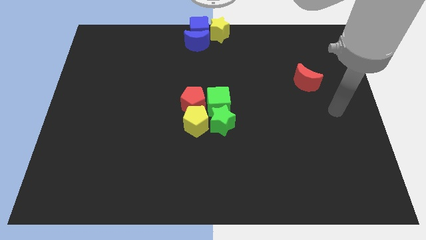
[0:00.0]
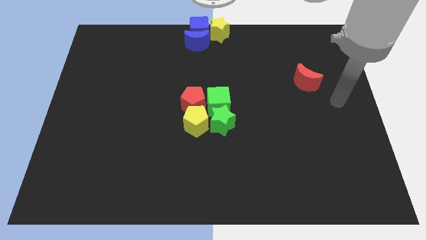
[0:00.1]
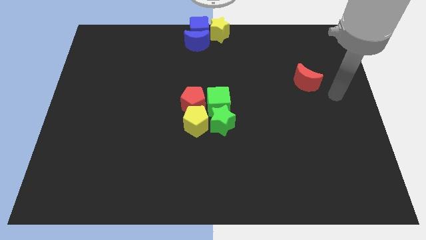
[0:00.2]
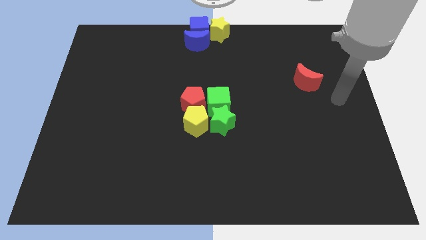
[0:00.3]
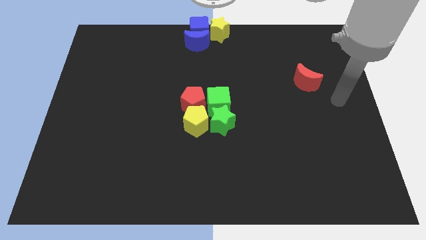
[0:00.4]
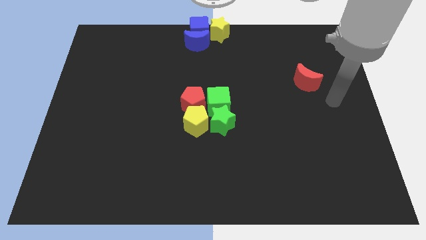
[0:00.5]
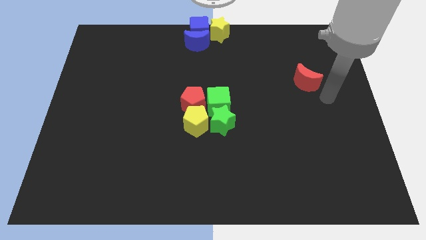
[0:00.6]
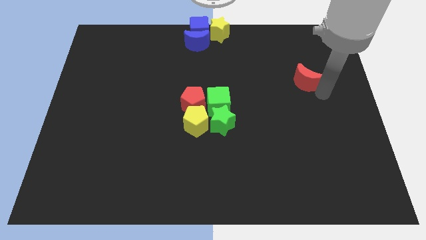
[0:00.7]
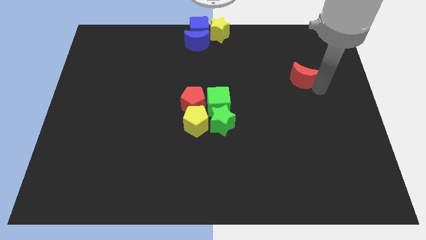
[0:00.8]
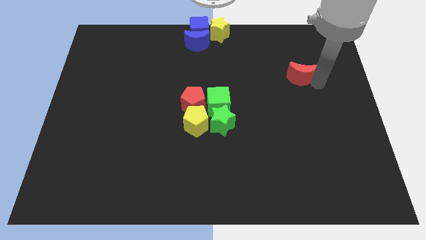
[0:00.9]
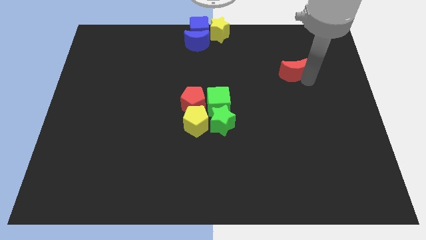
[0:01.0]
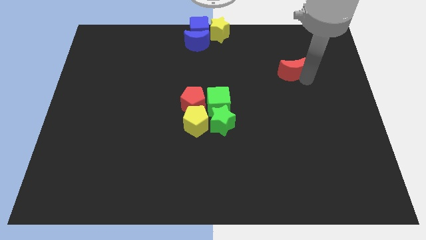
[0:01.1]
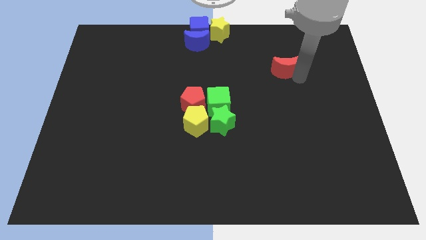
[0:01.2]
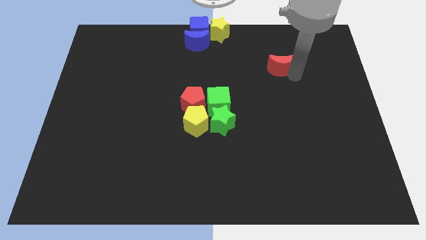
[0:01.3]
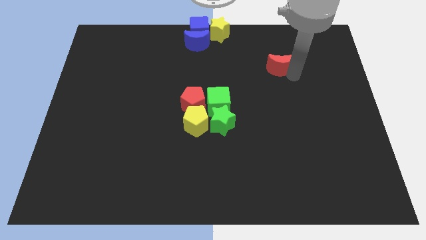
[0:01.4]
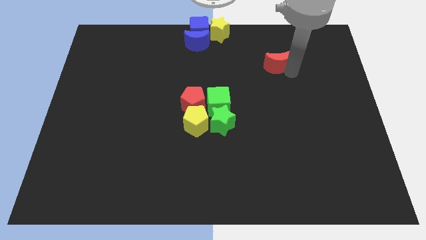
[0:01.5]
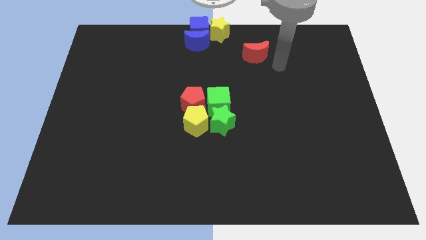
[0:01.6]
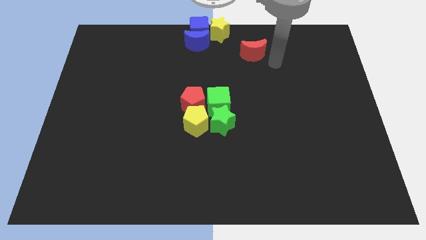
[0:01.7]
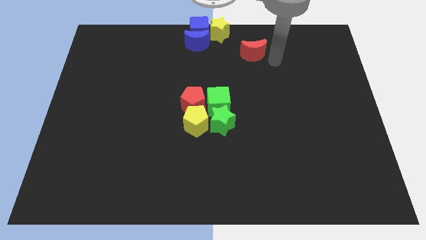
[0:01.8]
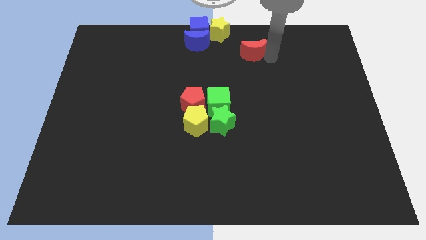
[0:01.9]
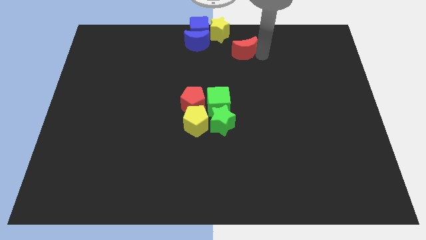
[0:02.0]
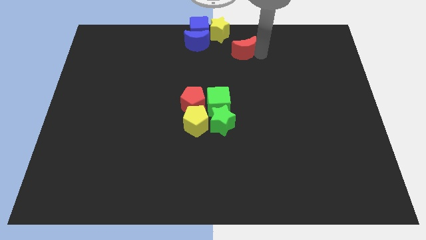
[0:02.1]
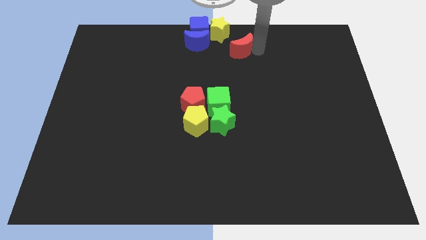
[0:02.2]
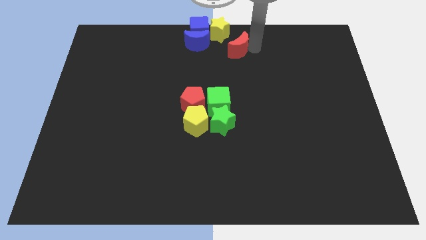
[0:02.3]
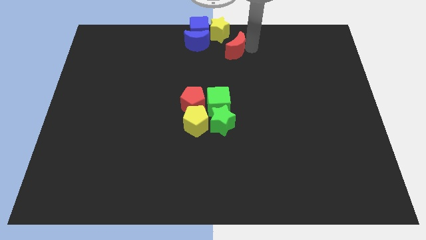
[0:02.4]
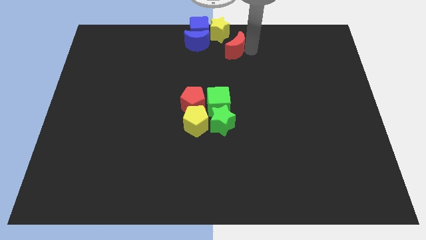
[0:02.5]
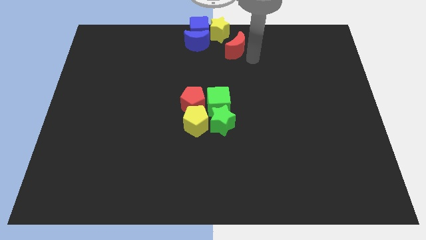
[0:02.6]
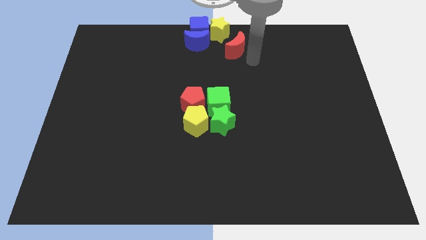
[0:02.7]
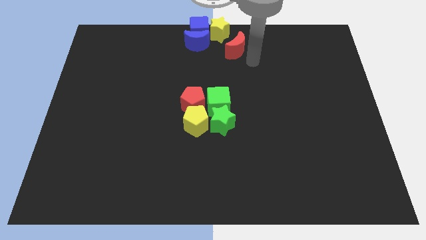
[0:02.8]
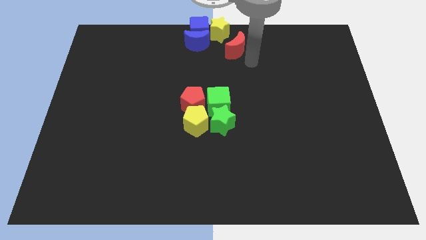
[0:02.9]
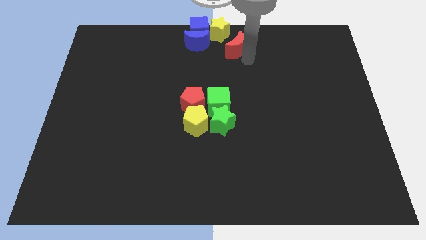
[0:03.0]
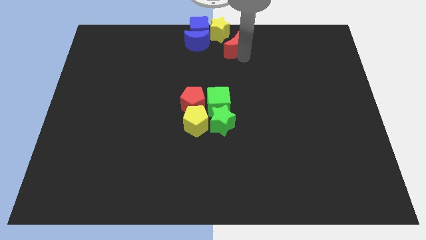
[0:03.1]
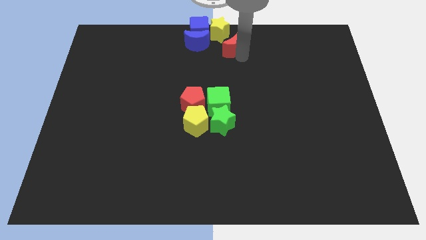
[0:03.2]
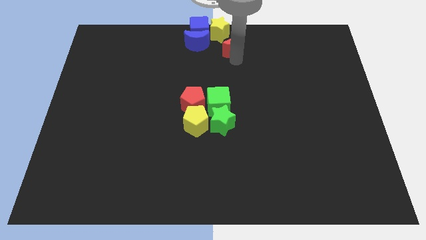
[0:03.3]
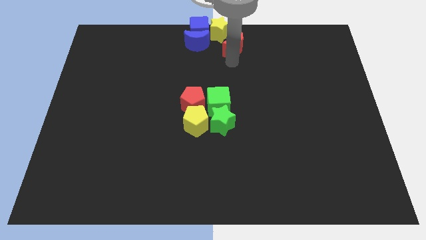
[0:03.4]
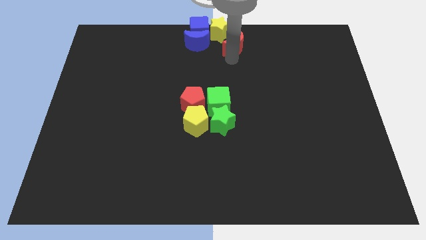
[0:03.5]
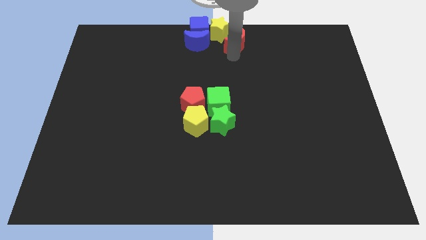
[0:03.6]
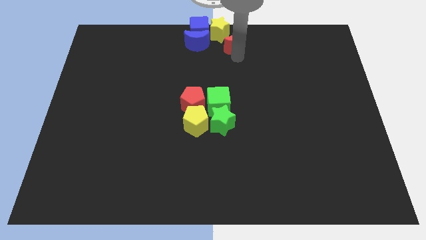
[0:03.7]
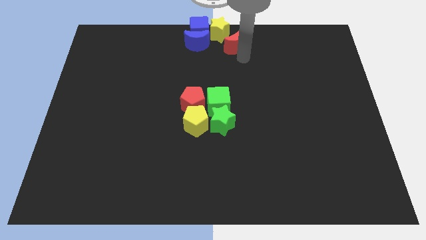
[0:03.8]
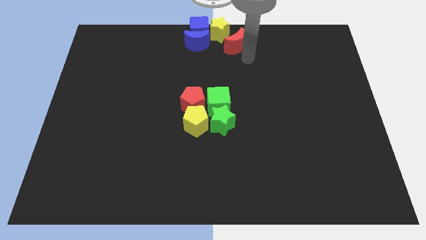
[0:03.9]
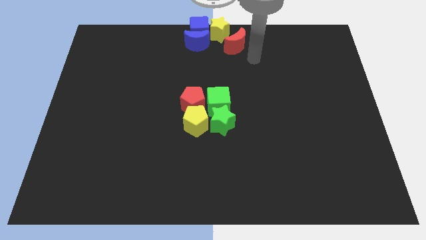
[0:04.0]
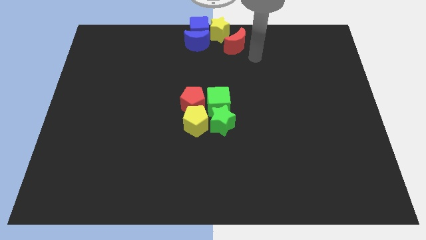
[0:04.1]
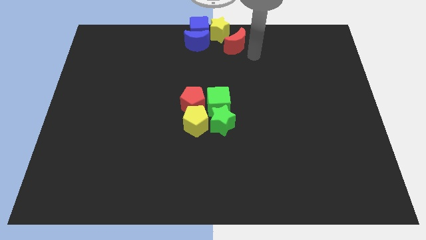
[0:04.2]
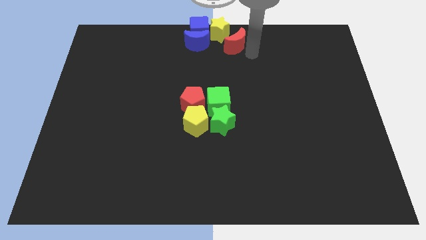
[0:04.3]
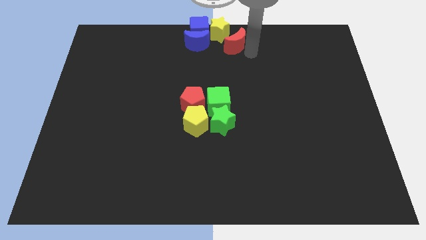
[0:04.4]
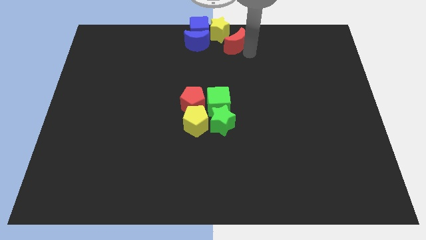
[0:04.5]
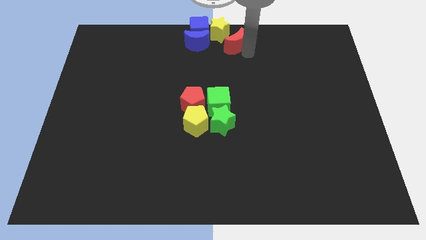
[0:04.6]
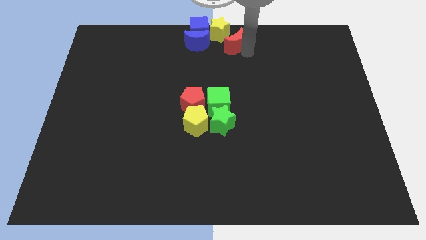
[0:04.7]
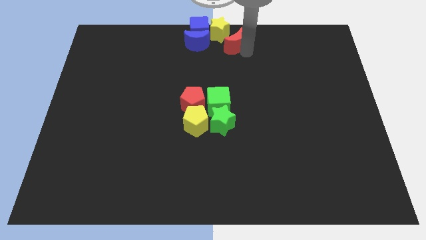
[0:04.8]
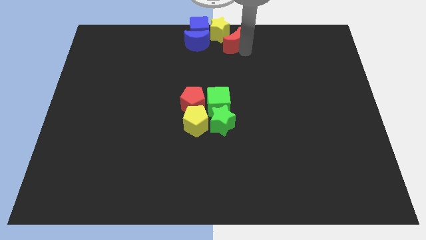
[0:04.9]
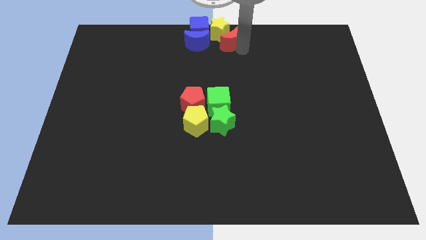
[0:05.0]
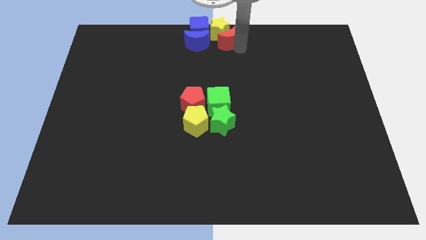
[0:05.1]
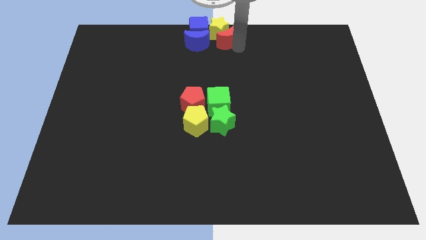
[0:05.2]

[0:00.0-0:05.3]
move the red crescent below the yellow star

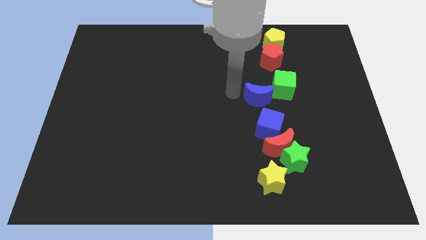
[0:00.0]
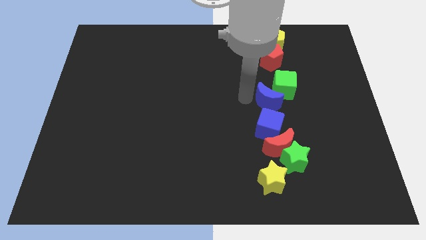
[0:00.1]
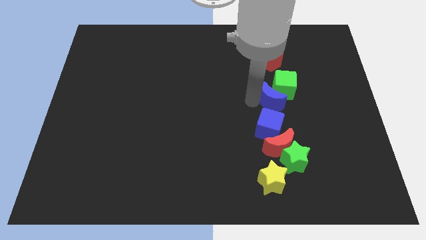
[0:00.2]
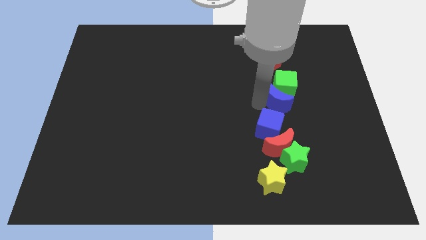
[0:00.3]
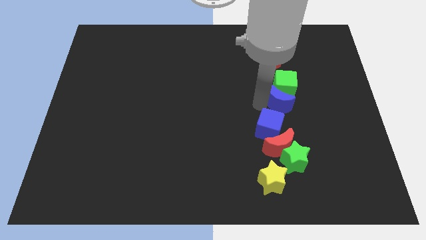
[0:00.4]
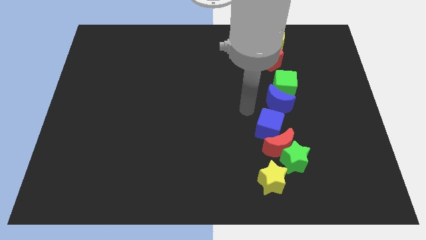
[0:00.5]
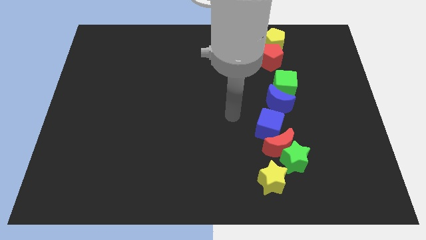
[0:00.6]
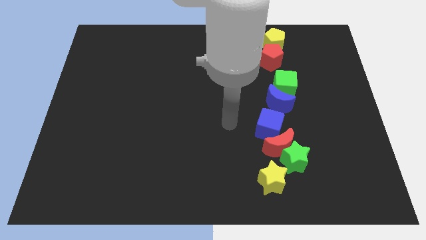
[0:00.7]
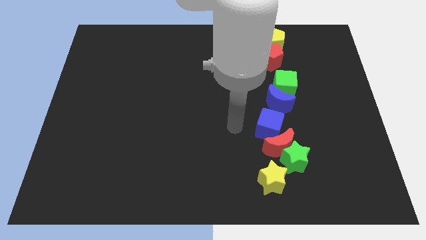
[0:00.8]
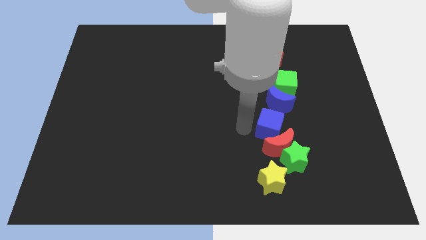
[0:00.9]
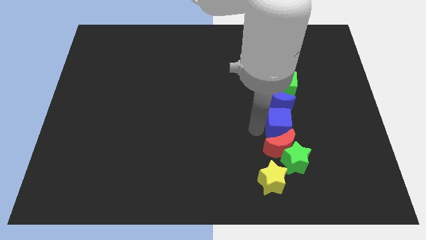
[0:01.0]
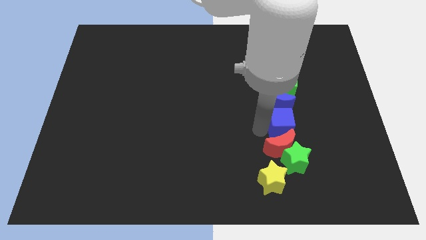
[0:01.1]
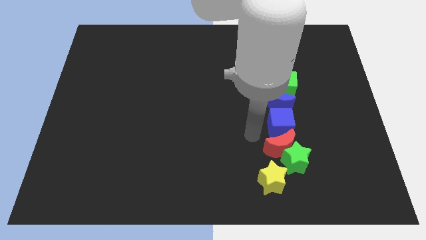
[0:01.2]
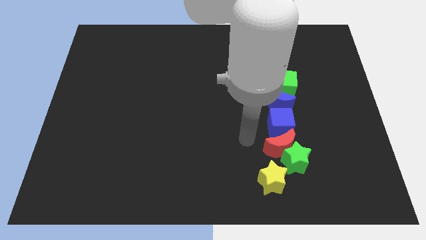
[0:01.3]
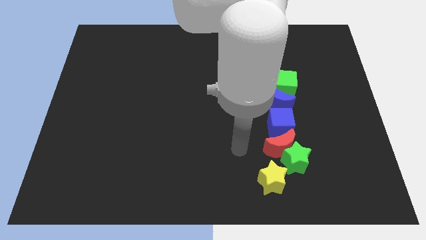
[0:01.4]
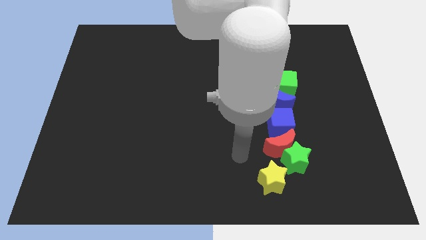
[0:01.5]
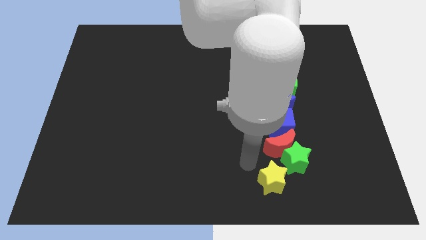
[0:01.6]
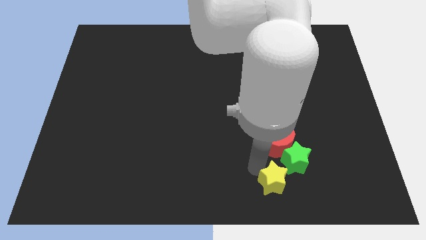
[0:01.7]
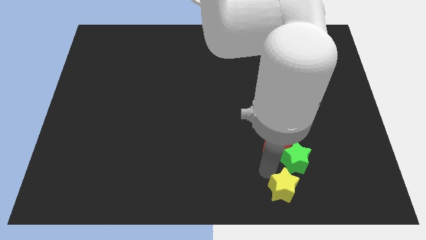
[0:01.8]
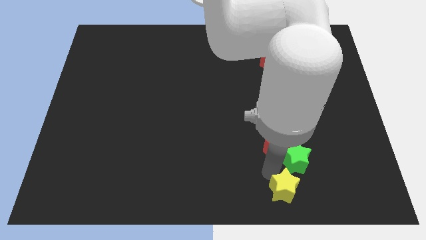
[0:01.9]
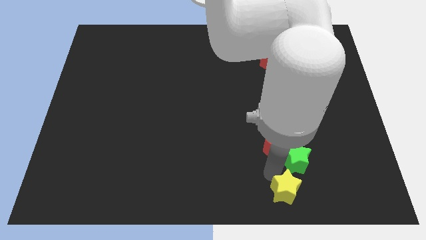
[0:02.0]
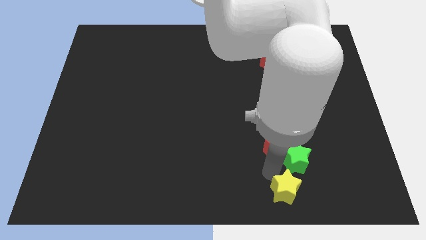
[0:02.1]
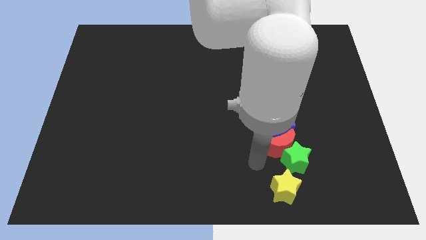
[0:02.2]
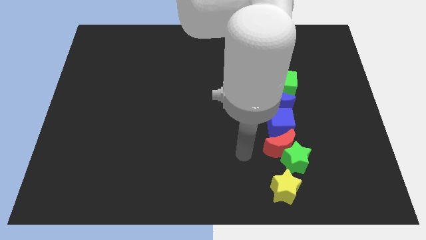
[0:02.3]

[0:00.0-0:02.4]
adjust the blue blocks and the yellow star to form a line

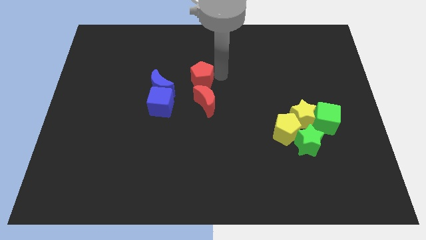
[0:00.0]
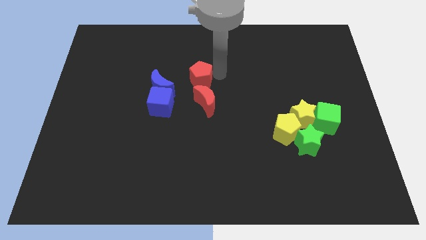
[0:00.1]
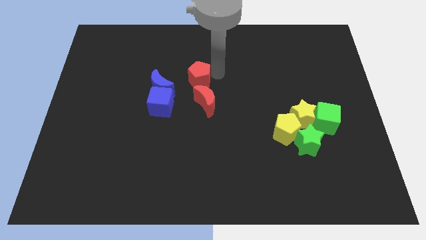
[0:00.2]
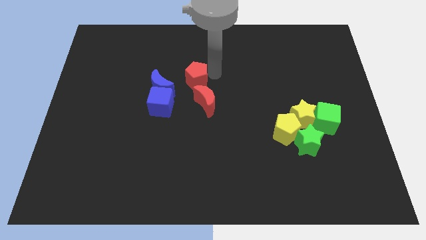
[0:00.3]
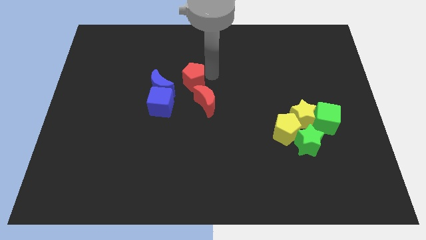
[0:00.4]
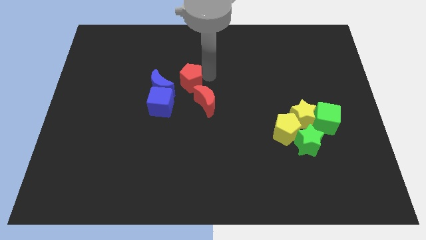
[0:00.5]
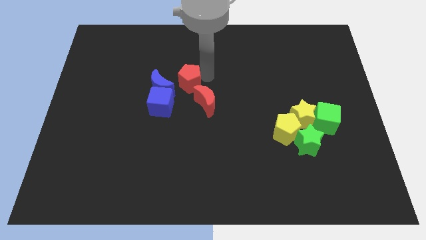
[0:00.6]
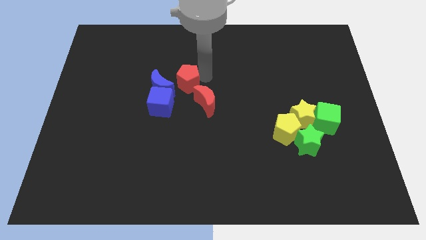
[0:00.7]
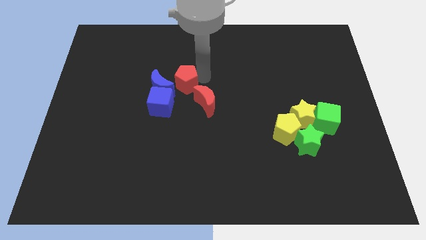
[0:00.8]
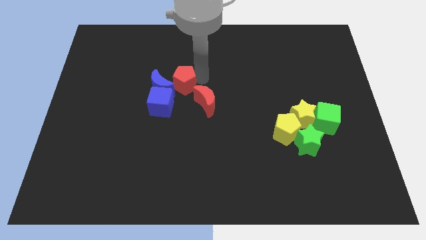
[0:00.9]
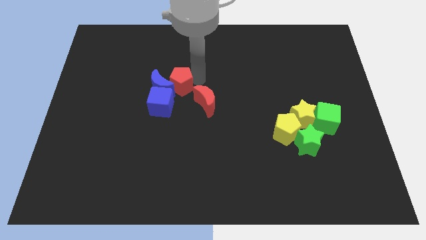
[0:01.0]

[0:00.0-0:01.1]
place the red pentagon beside the blue crescent

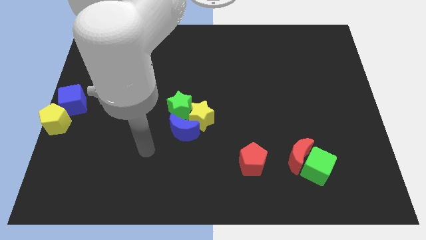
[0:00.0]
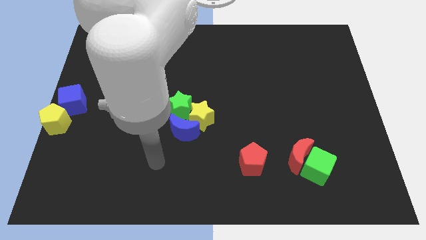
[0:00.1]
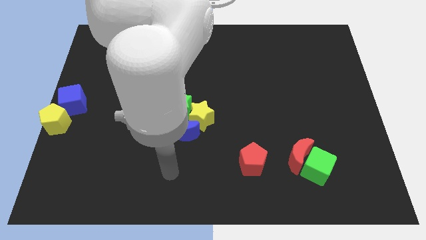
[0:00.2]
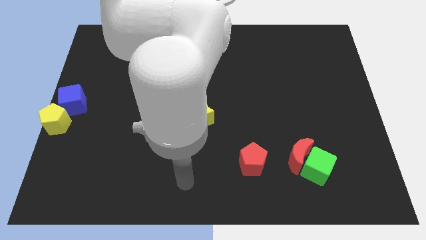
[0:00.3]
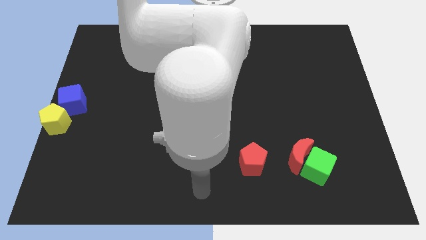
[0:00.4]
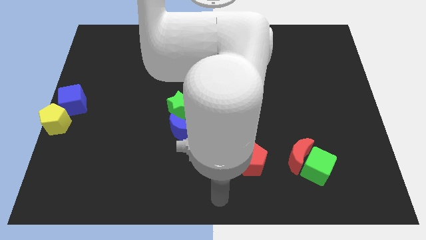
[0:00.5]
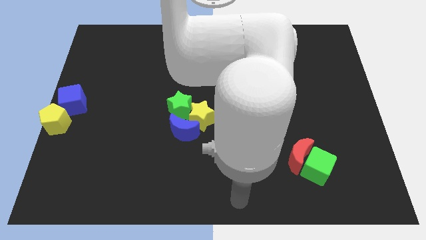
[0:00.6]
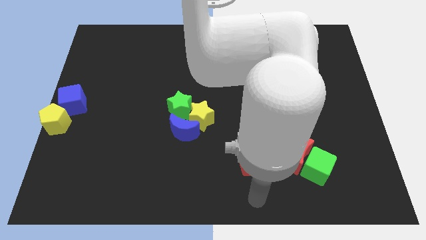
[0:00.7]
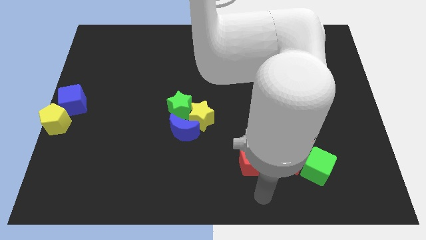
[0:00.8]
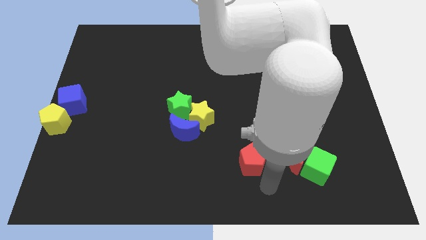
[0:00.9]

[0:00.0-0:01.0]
point your hand at the bottom right of the red pentagon
